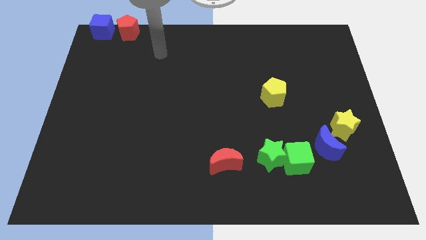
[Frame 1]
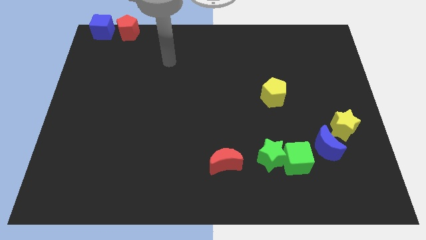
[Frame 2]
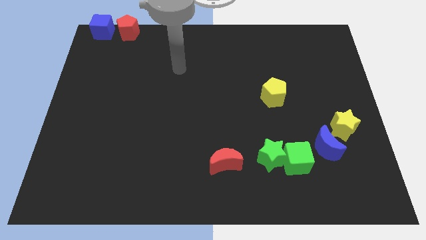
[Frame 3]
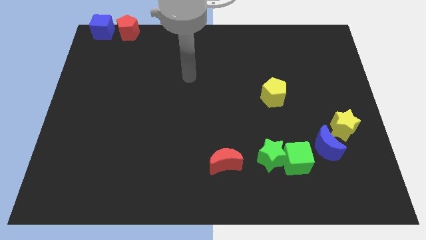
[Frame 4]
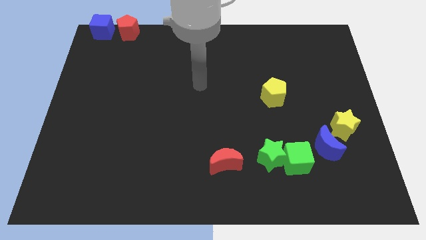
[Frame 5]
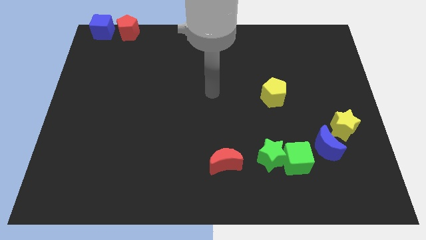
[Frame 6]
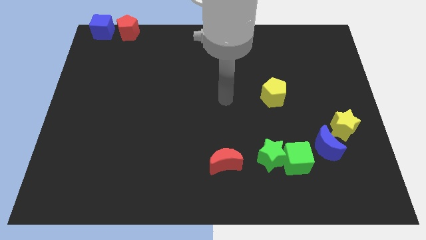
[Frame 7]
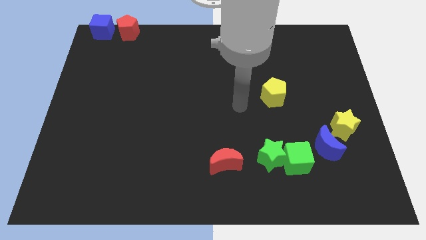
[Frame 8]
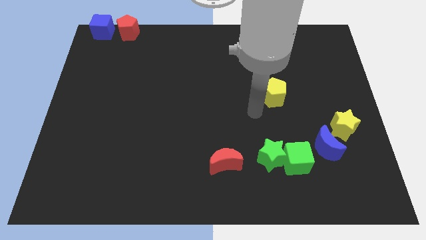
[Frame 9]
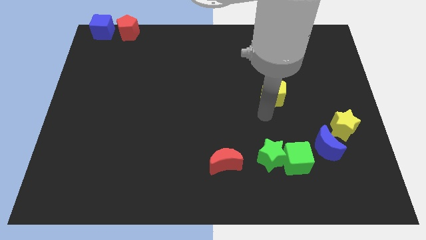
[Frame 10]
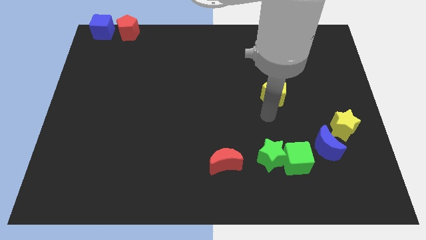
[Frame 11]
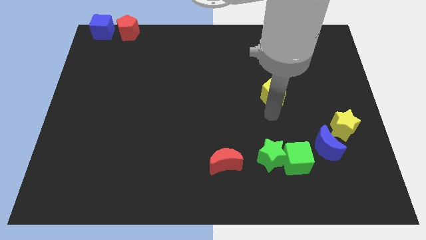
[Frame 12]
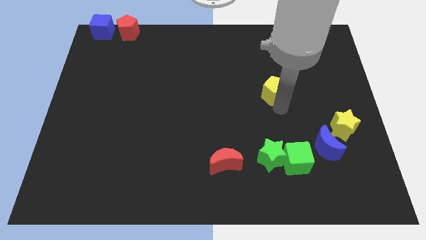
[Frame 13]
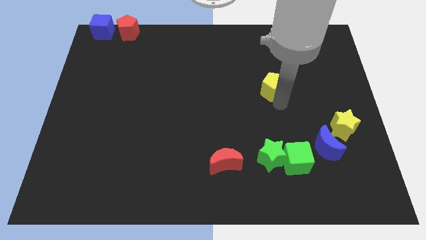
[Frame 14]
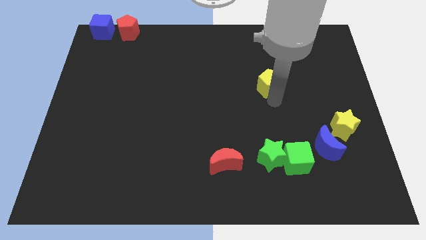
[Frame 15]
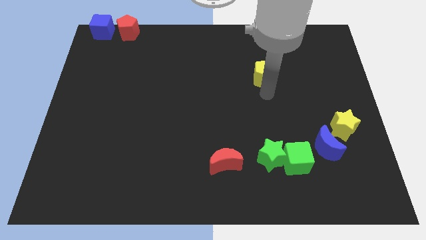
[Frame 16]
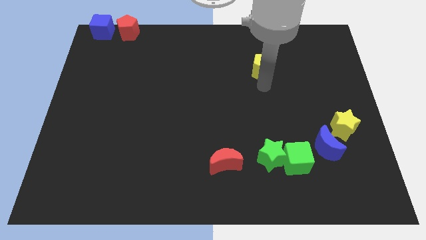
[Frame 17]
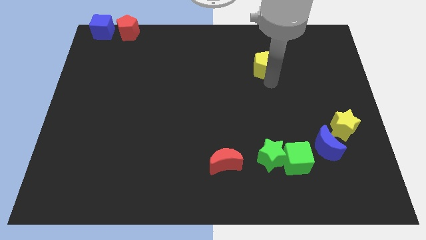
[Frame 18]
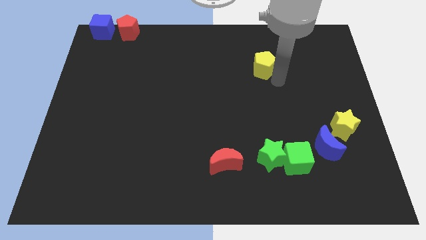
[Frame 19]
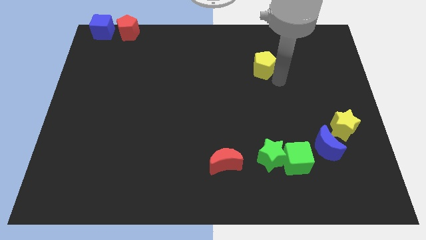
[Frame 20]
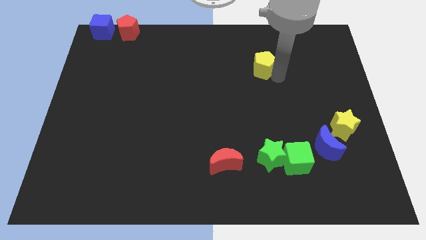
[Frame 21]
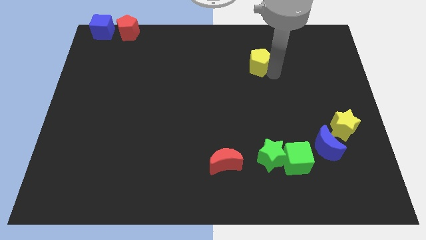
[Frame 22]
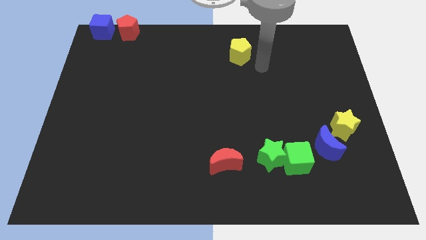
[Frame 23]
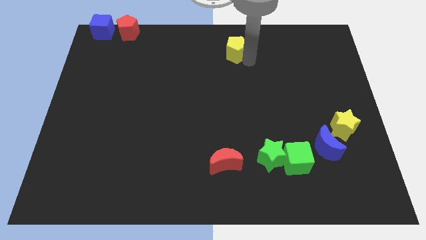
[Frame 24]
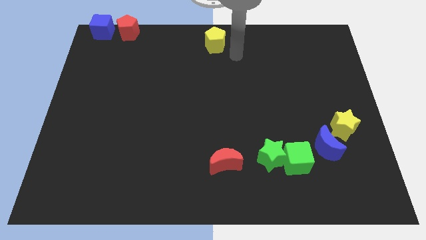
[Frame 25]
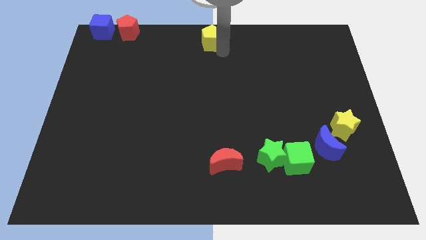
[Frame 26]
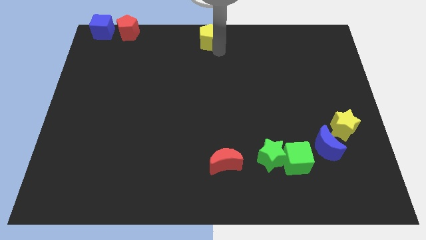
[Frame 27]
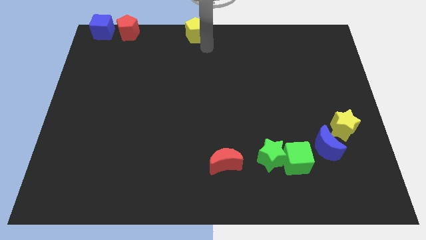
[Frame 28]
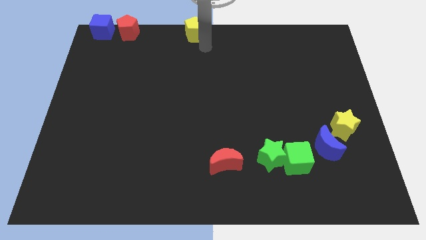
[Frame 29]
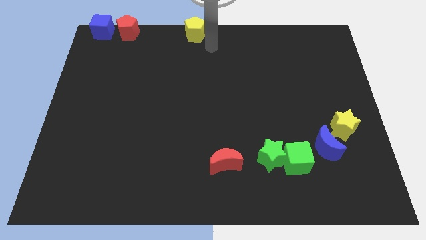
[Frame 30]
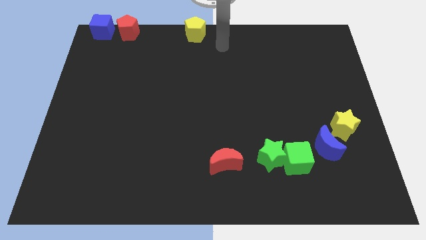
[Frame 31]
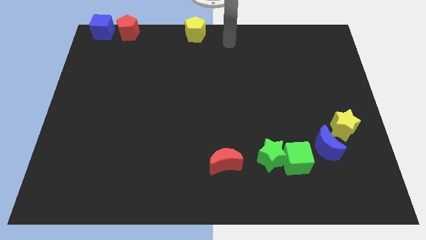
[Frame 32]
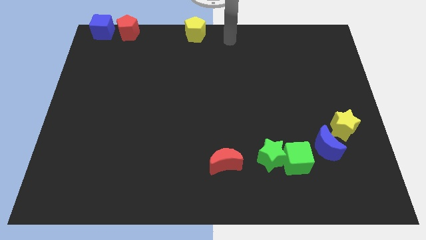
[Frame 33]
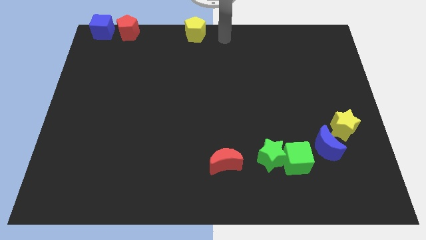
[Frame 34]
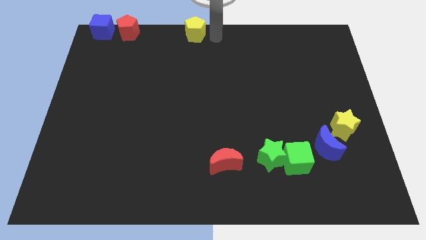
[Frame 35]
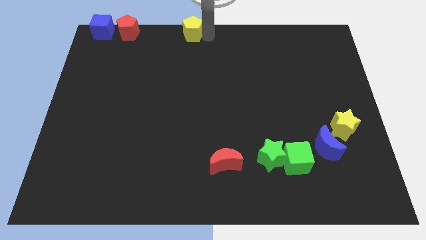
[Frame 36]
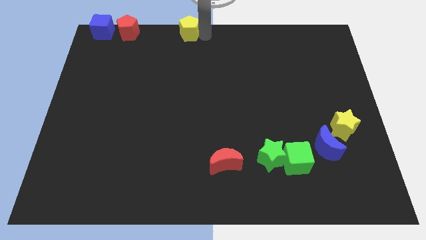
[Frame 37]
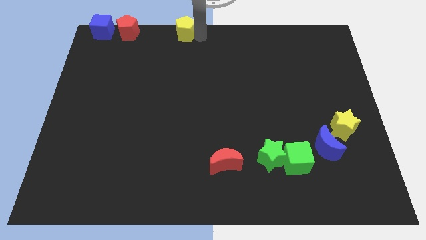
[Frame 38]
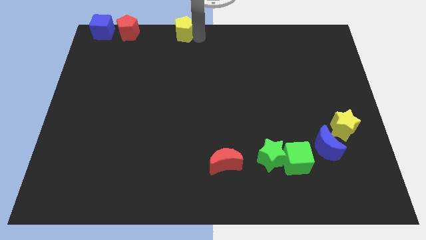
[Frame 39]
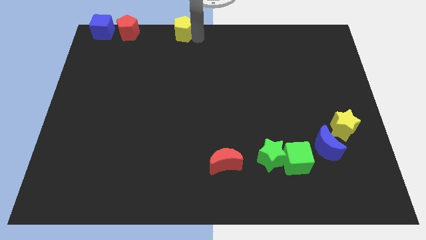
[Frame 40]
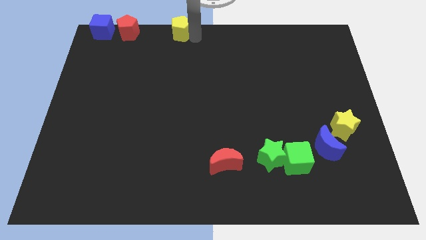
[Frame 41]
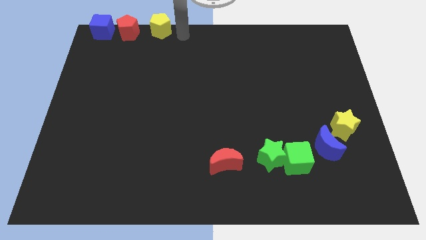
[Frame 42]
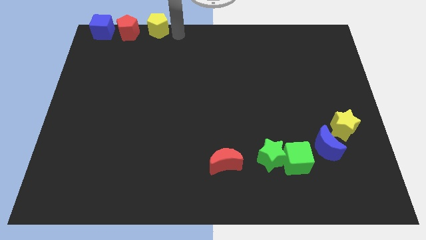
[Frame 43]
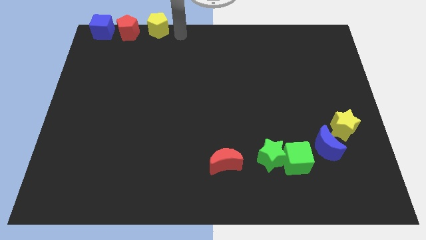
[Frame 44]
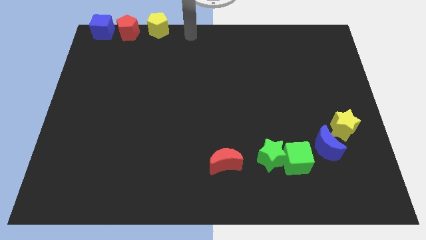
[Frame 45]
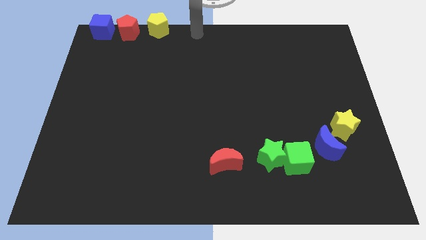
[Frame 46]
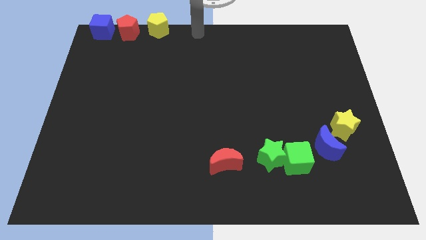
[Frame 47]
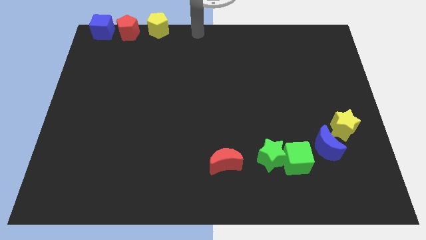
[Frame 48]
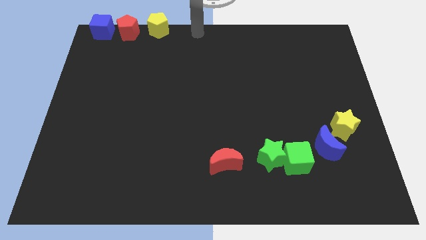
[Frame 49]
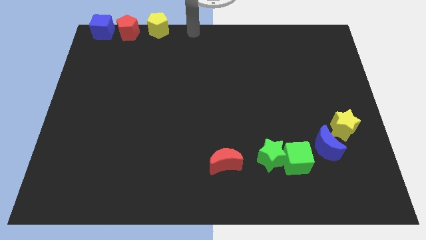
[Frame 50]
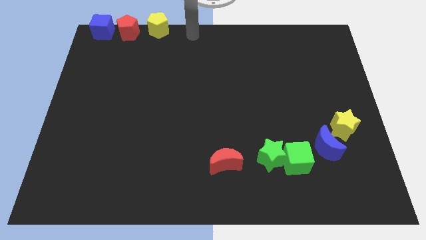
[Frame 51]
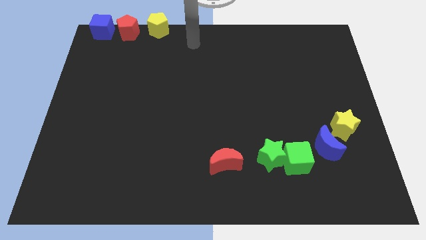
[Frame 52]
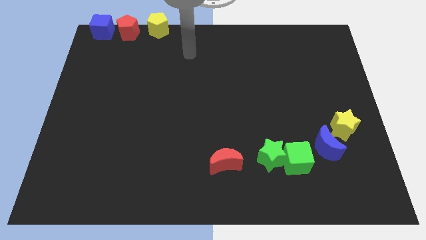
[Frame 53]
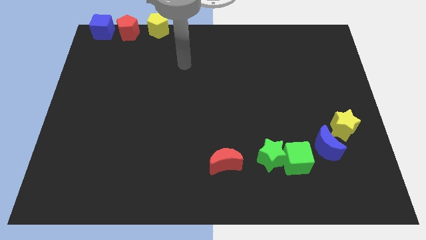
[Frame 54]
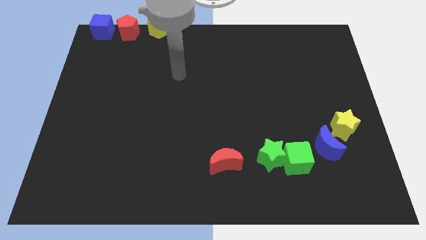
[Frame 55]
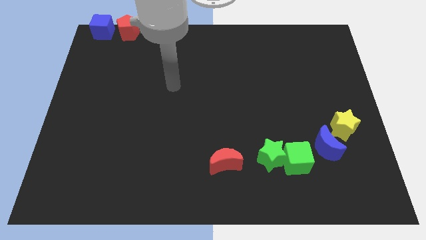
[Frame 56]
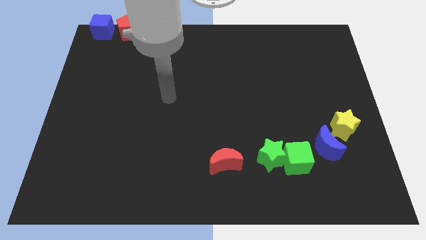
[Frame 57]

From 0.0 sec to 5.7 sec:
push the yellow pentagon right to the red pentagon

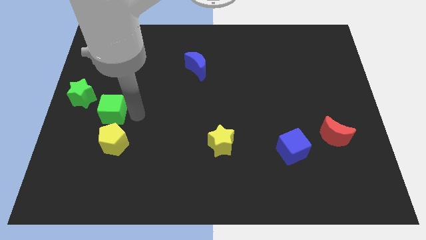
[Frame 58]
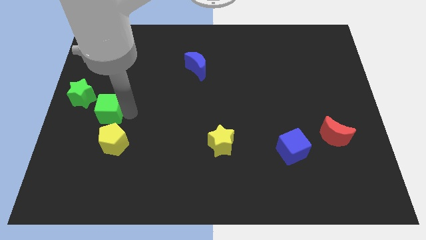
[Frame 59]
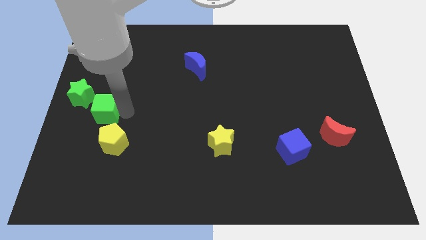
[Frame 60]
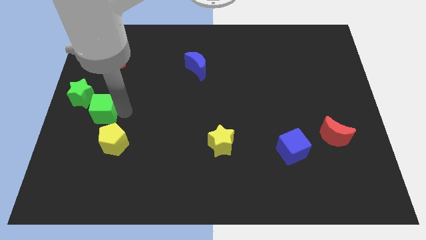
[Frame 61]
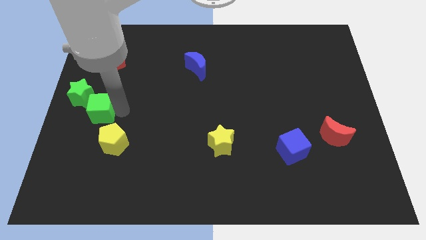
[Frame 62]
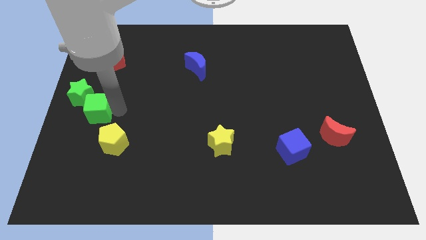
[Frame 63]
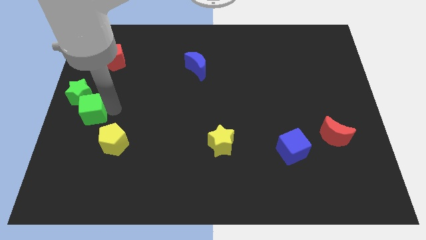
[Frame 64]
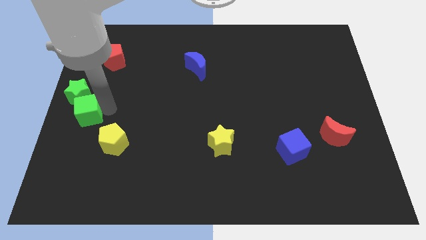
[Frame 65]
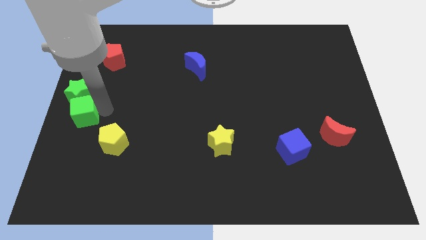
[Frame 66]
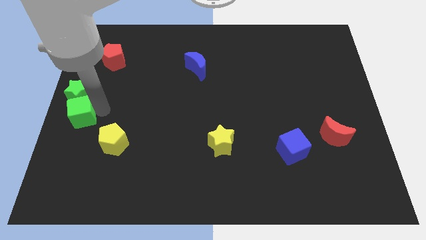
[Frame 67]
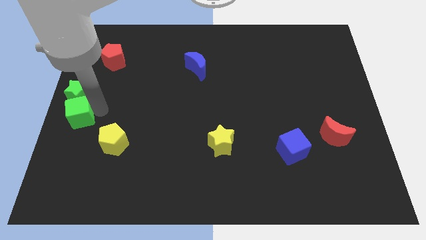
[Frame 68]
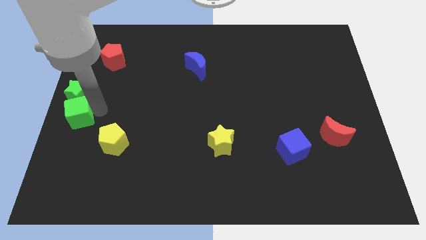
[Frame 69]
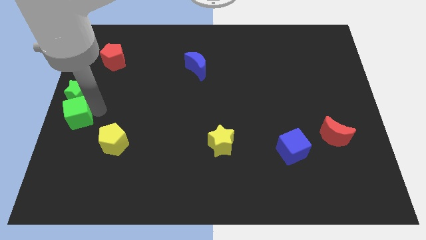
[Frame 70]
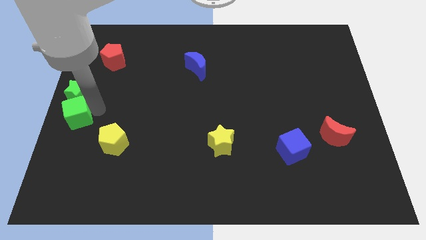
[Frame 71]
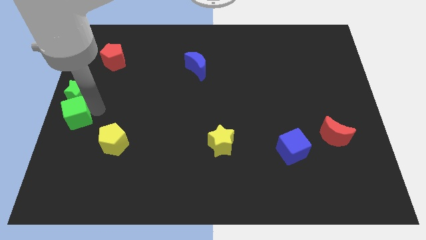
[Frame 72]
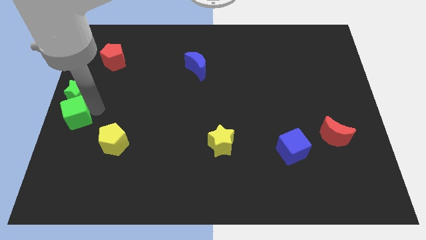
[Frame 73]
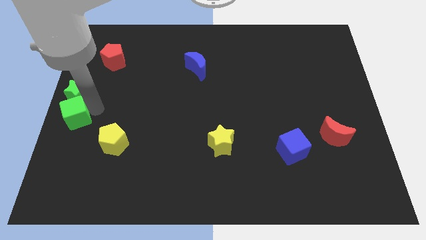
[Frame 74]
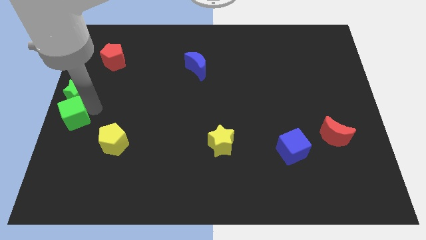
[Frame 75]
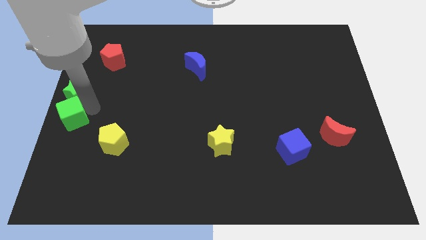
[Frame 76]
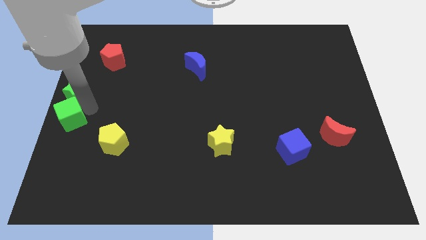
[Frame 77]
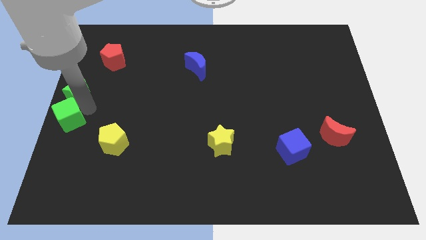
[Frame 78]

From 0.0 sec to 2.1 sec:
slide the green cube to the bottom of the green star

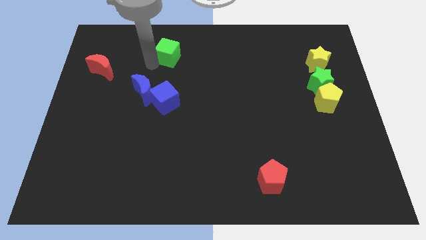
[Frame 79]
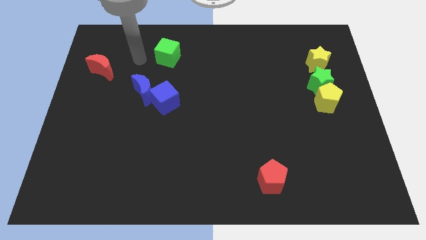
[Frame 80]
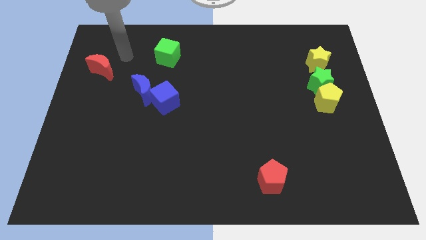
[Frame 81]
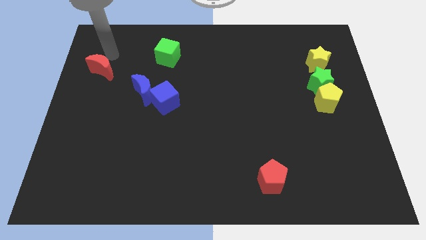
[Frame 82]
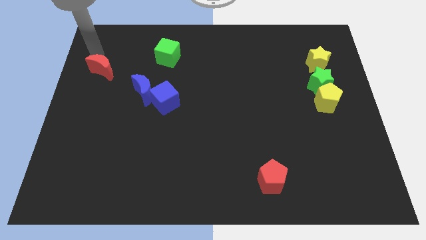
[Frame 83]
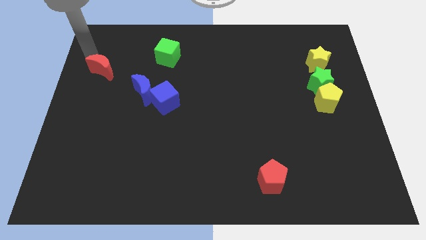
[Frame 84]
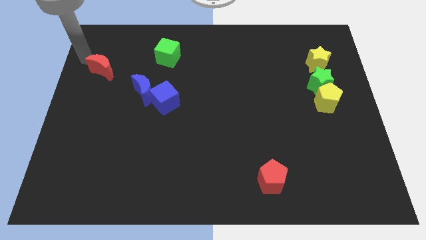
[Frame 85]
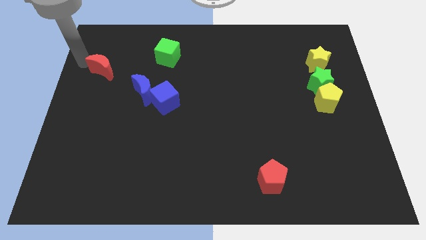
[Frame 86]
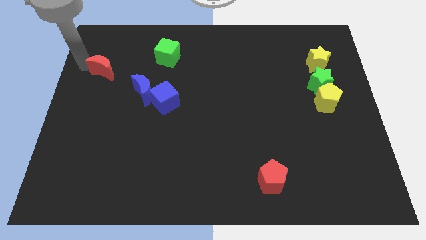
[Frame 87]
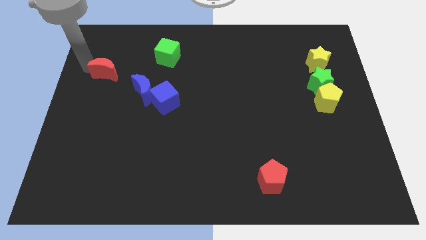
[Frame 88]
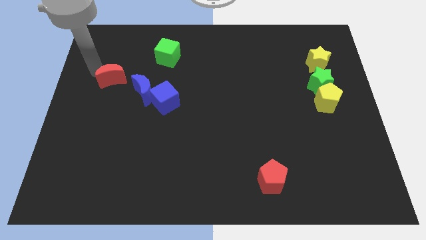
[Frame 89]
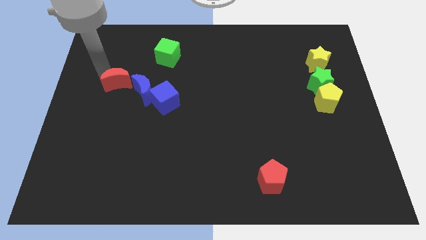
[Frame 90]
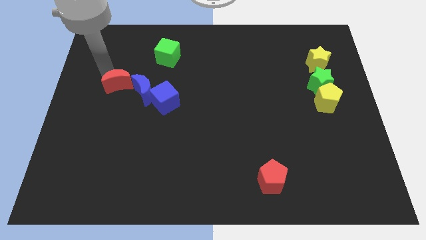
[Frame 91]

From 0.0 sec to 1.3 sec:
move red moon to the top left of blue moon
